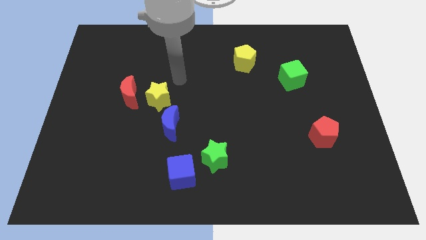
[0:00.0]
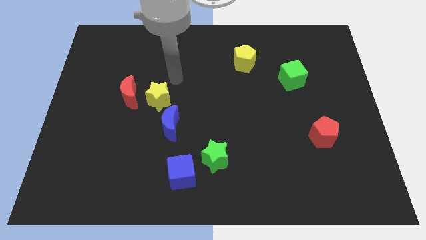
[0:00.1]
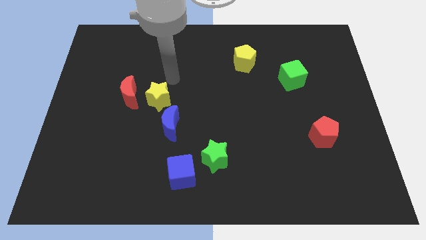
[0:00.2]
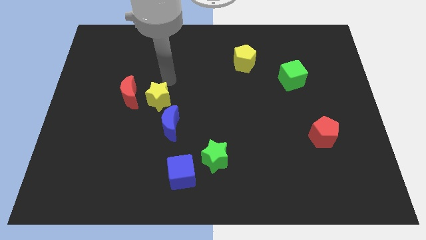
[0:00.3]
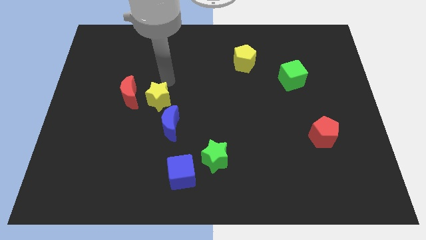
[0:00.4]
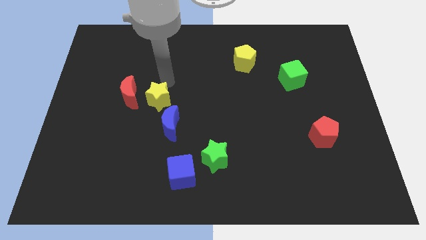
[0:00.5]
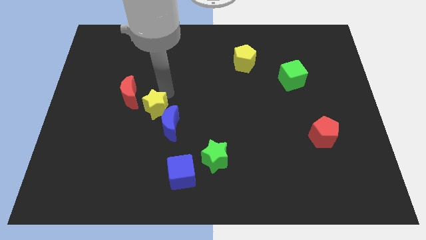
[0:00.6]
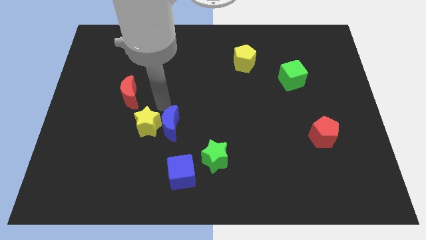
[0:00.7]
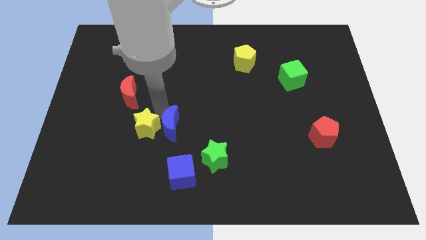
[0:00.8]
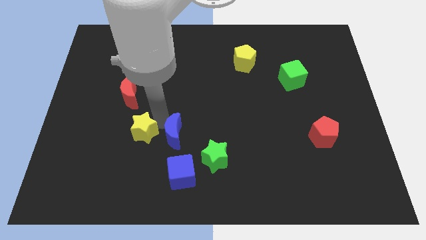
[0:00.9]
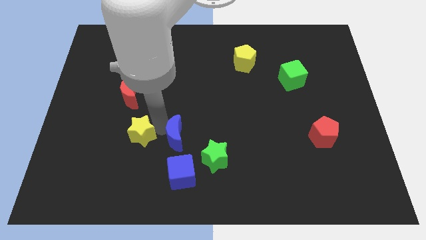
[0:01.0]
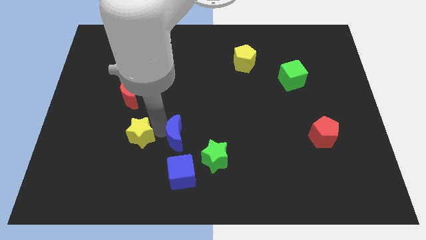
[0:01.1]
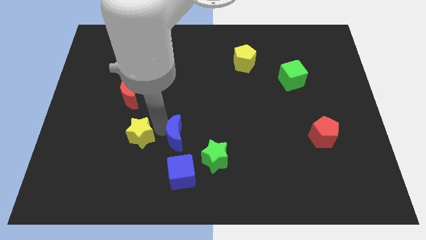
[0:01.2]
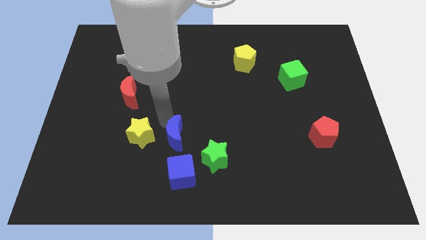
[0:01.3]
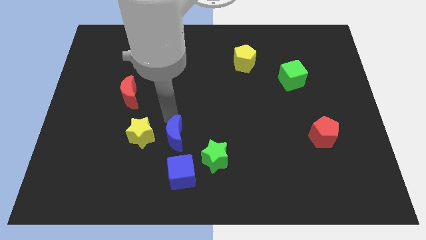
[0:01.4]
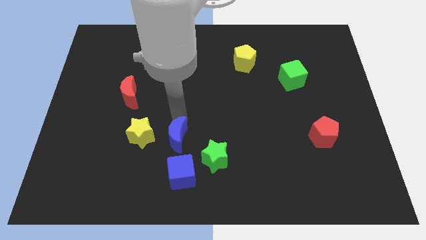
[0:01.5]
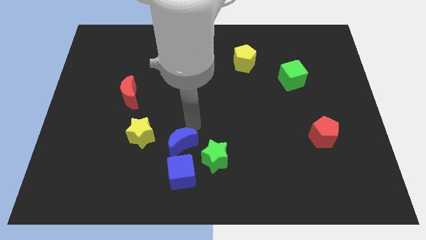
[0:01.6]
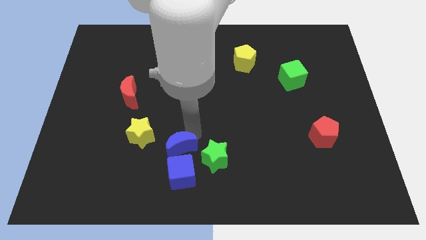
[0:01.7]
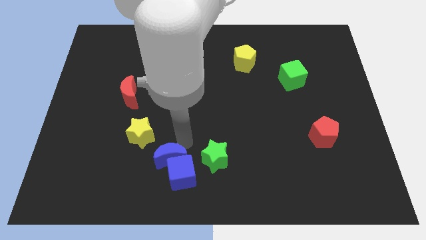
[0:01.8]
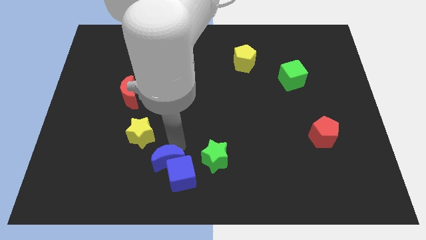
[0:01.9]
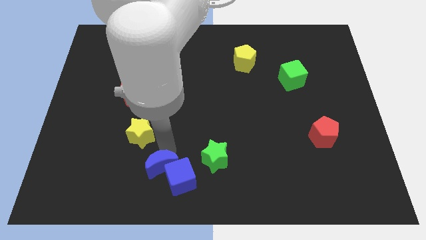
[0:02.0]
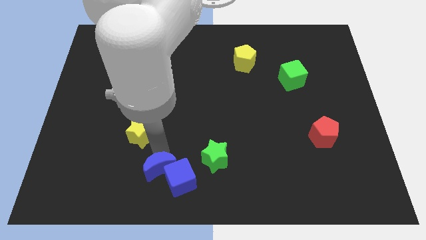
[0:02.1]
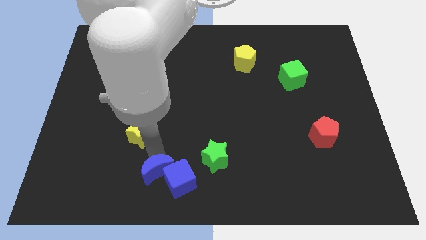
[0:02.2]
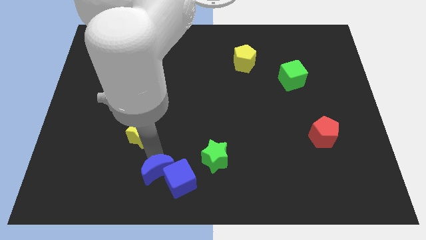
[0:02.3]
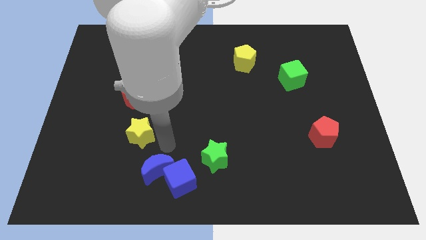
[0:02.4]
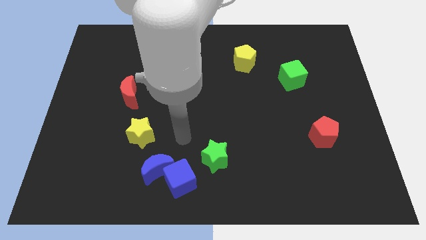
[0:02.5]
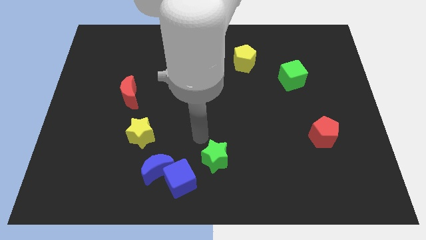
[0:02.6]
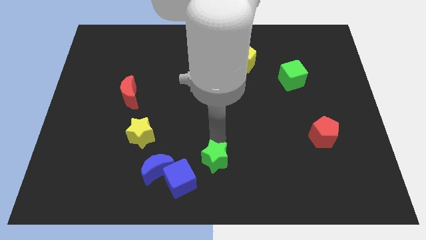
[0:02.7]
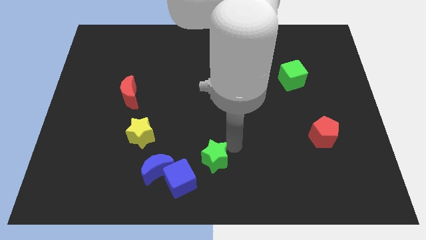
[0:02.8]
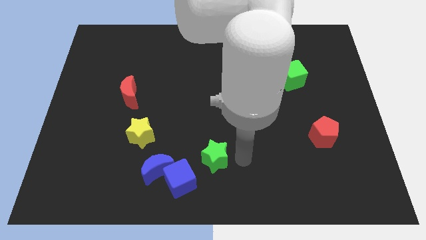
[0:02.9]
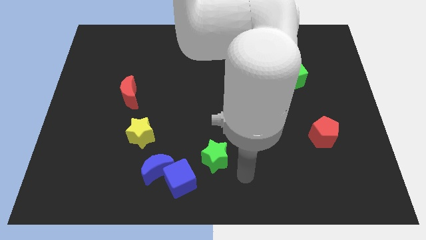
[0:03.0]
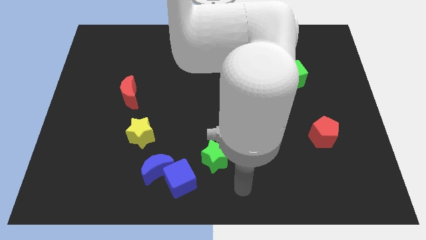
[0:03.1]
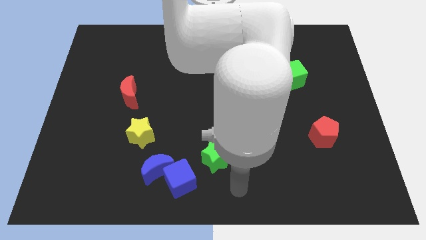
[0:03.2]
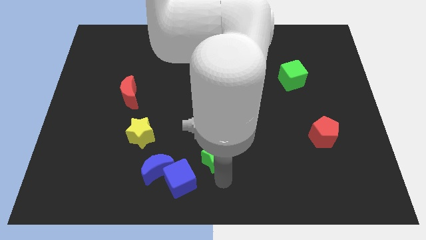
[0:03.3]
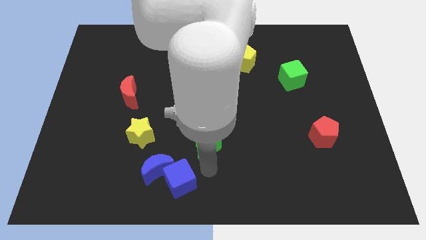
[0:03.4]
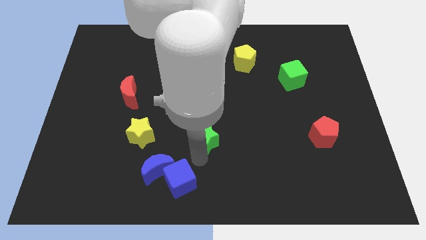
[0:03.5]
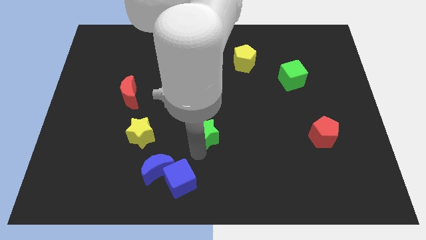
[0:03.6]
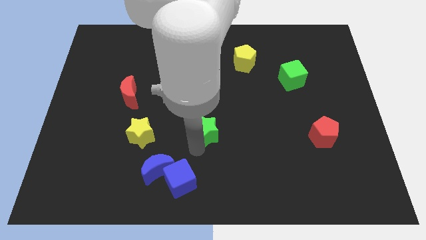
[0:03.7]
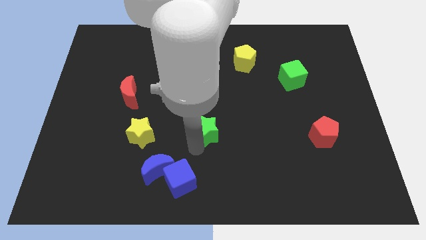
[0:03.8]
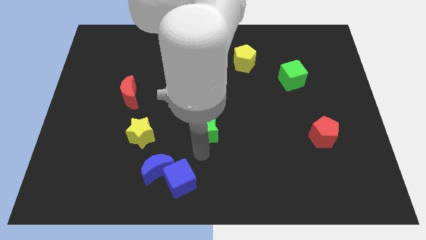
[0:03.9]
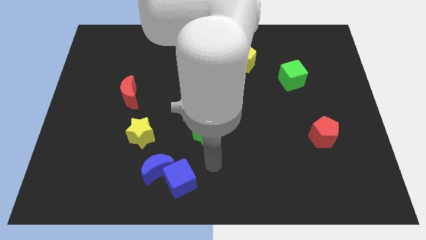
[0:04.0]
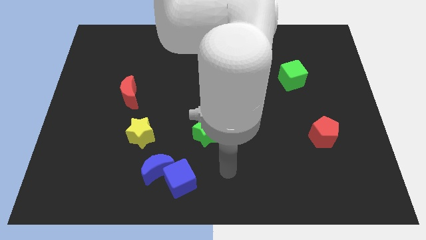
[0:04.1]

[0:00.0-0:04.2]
push the yellow star to the left of green star

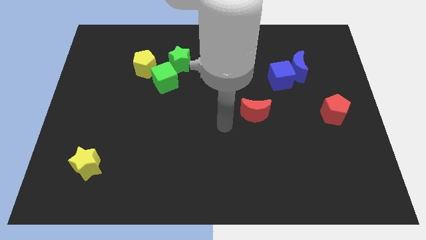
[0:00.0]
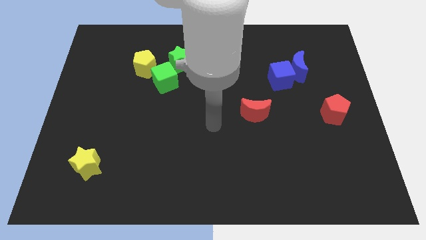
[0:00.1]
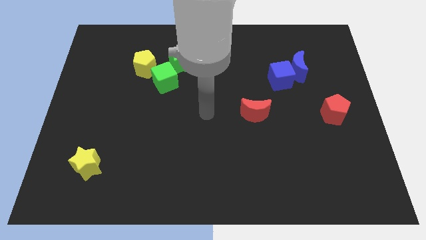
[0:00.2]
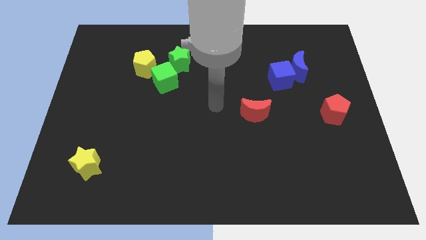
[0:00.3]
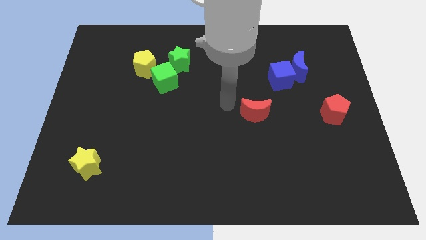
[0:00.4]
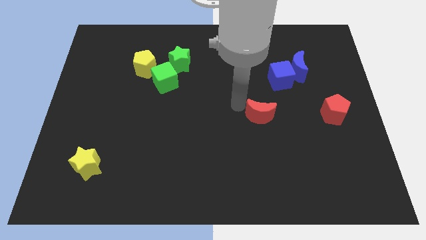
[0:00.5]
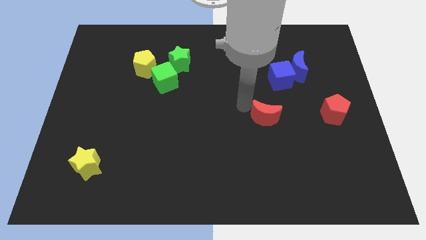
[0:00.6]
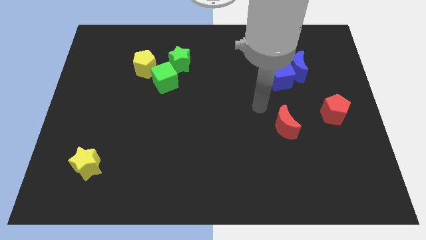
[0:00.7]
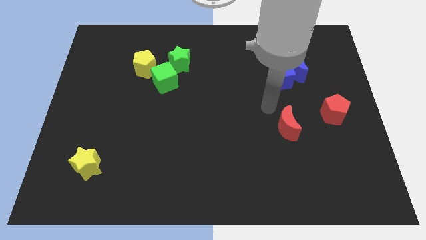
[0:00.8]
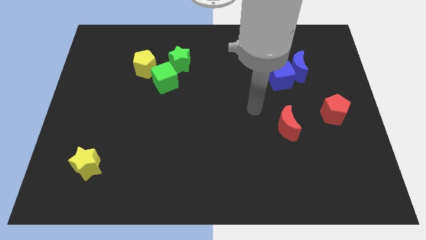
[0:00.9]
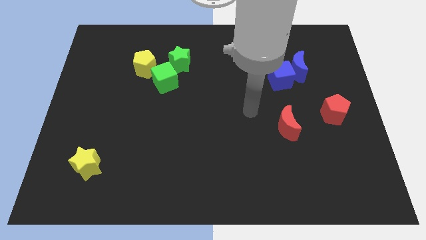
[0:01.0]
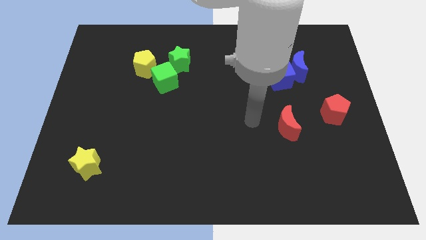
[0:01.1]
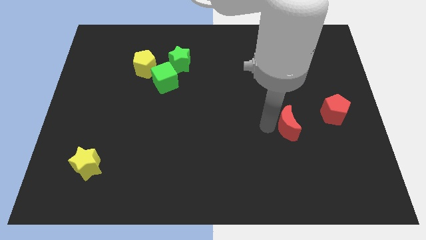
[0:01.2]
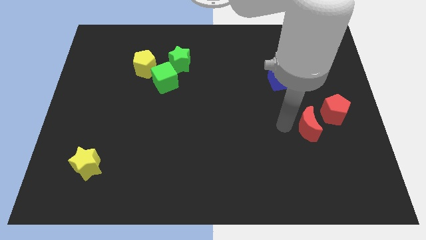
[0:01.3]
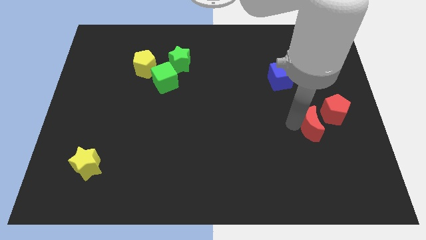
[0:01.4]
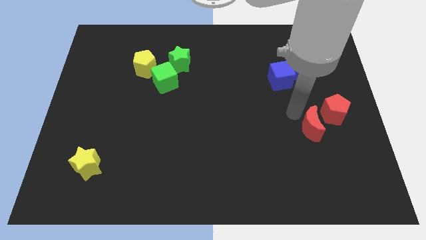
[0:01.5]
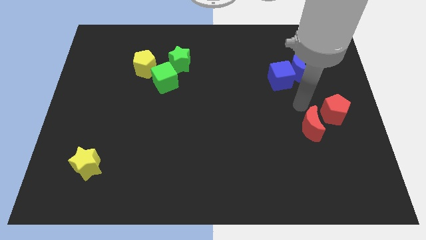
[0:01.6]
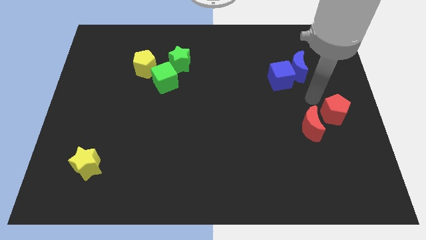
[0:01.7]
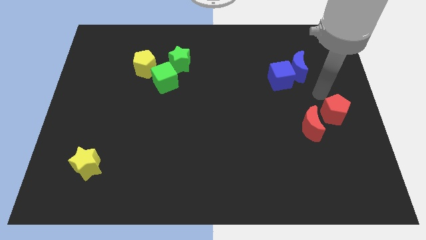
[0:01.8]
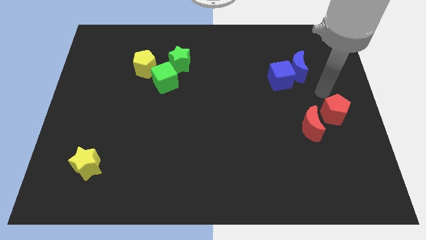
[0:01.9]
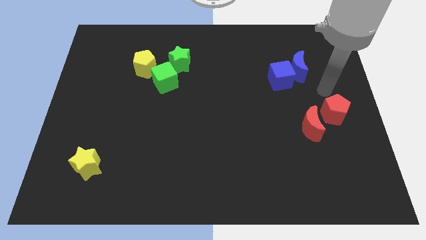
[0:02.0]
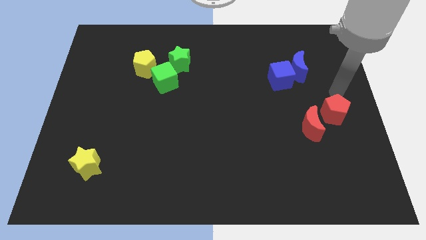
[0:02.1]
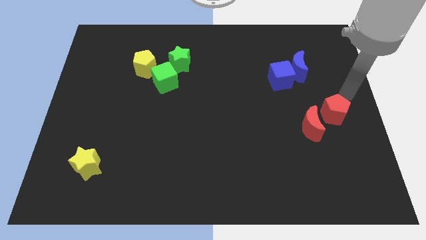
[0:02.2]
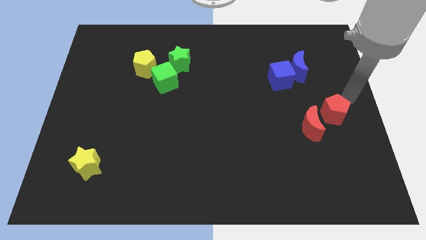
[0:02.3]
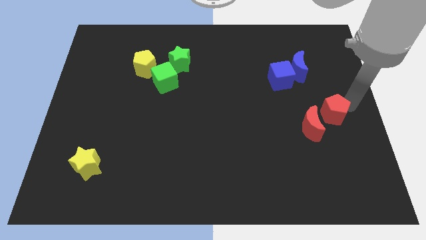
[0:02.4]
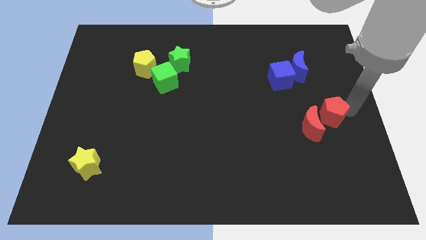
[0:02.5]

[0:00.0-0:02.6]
move the red moon towards the center right side of the board

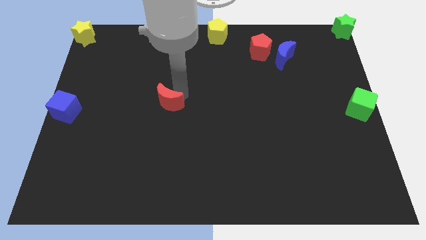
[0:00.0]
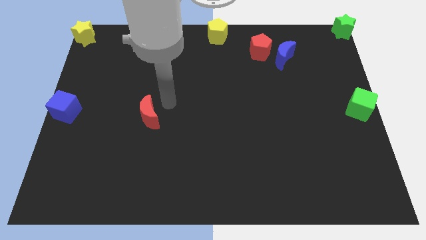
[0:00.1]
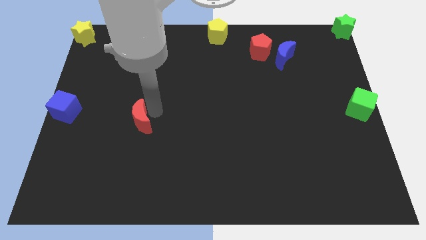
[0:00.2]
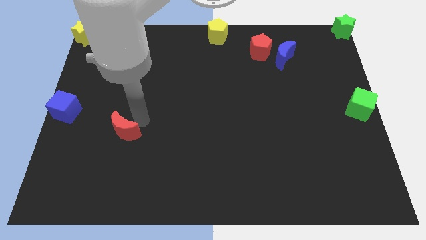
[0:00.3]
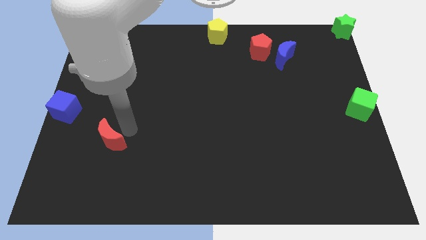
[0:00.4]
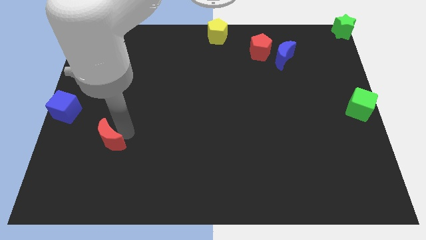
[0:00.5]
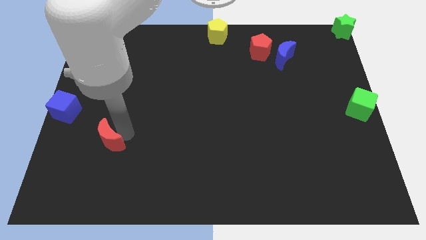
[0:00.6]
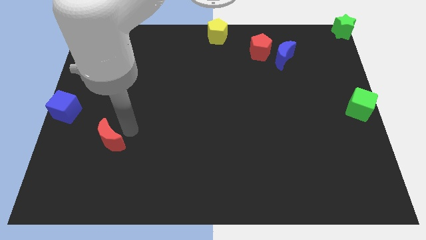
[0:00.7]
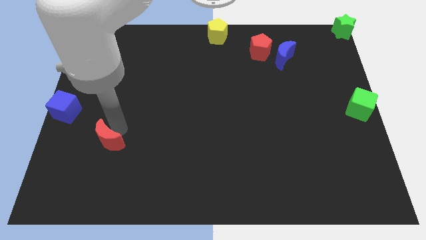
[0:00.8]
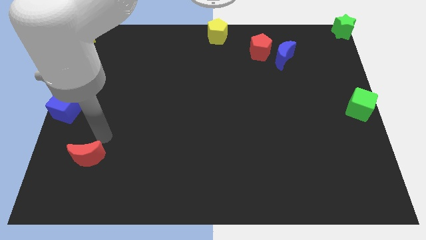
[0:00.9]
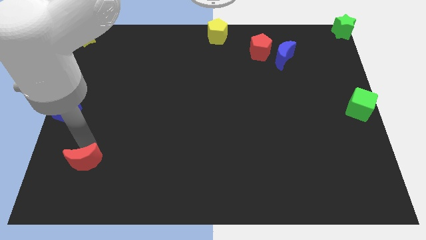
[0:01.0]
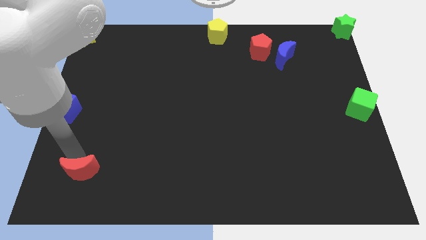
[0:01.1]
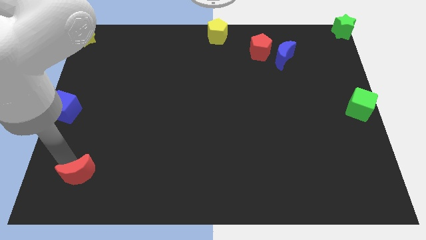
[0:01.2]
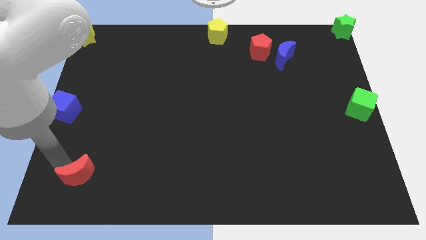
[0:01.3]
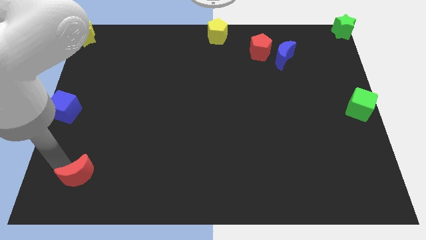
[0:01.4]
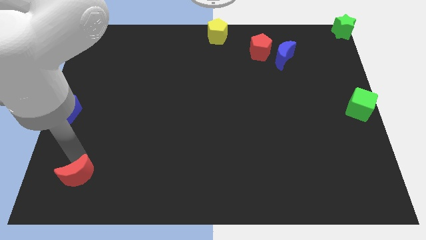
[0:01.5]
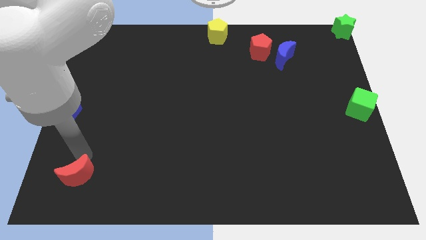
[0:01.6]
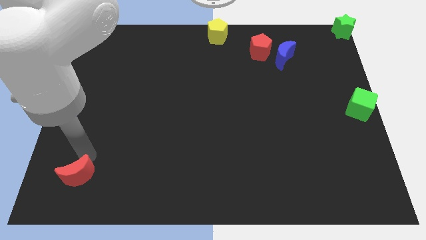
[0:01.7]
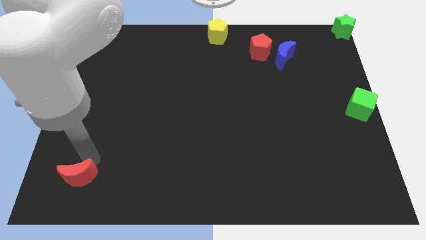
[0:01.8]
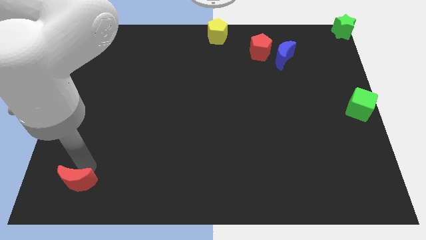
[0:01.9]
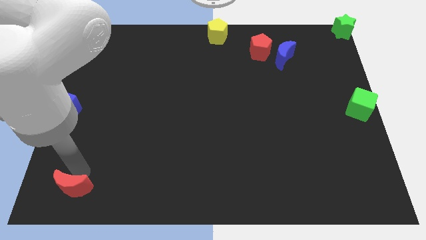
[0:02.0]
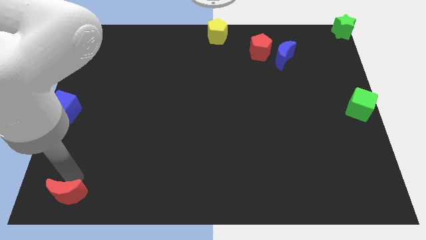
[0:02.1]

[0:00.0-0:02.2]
move the red crescent towards the bottom left to the board
